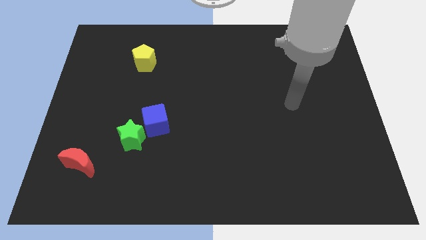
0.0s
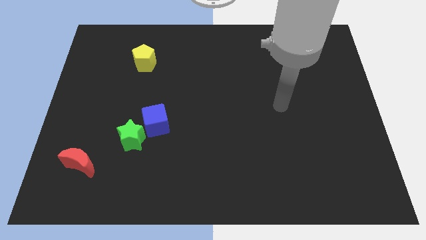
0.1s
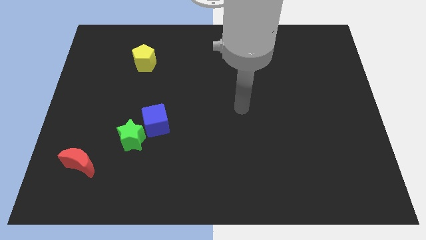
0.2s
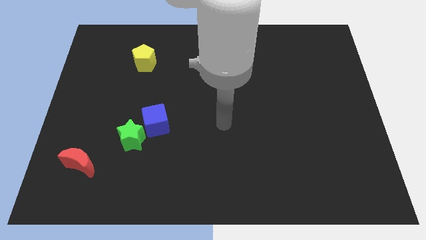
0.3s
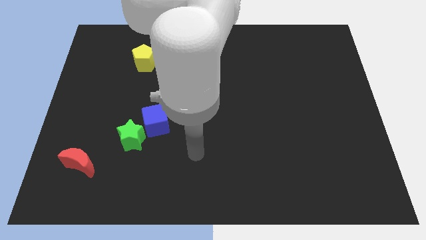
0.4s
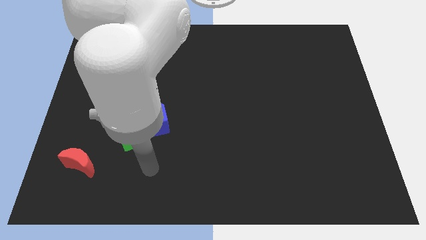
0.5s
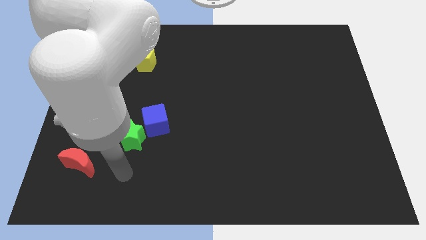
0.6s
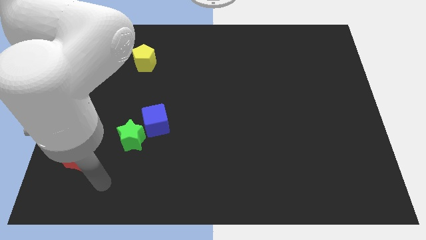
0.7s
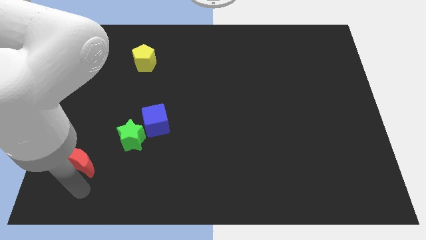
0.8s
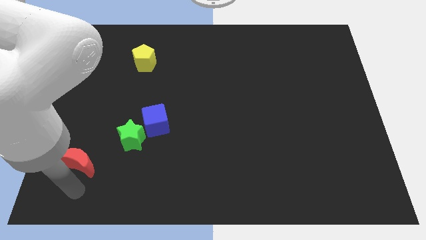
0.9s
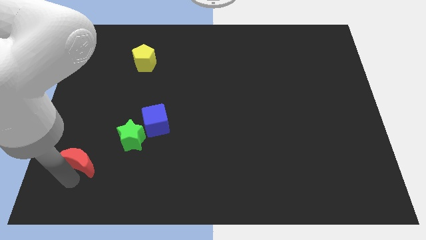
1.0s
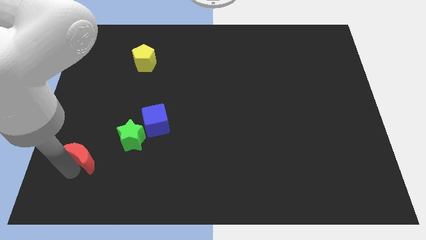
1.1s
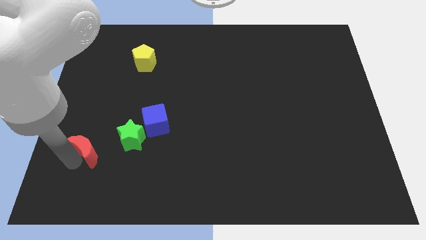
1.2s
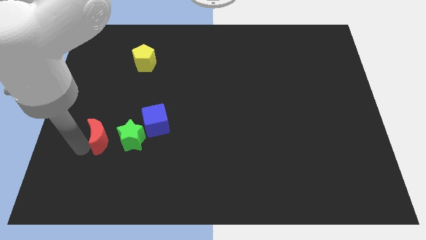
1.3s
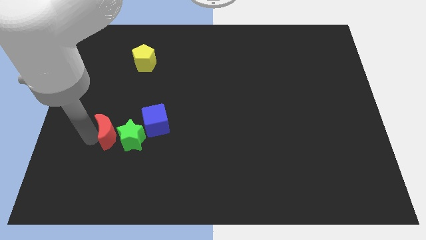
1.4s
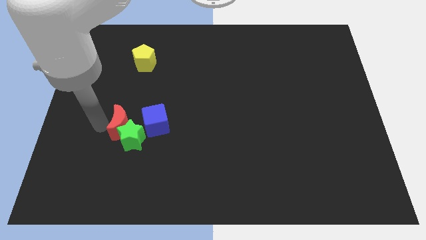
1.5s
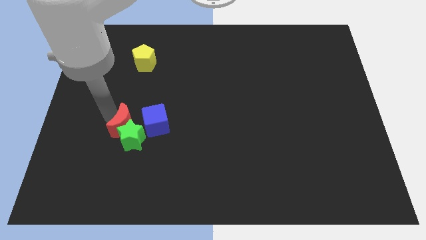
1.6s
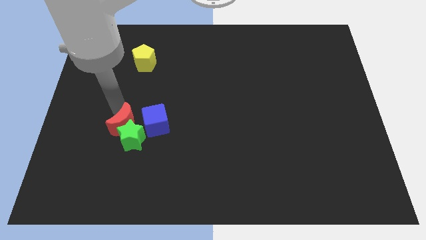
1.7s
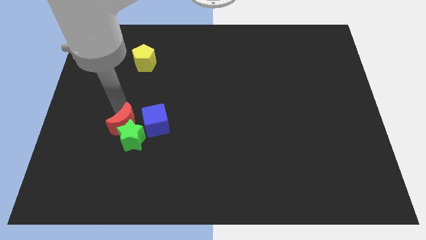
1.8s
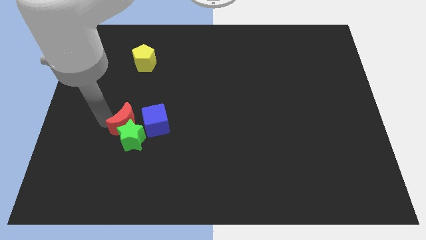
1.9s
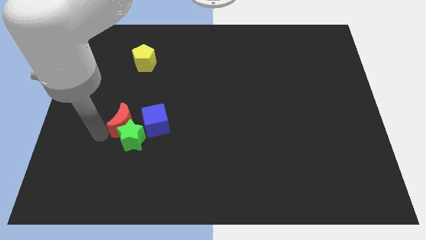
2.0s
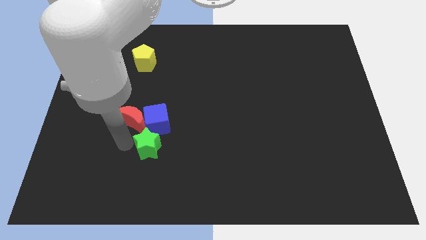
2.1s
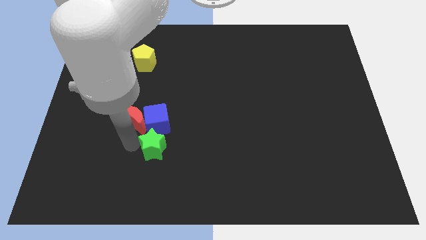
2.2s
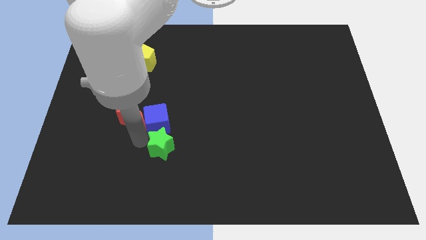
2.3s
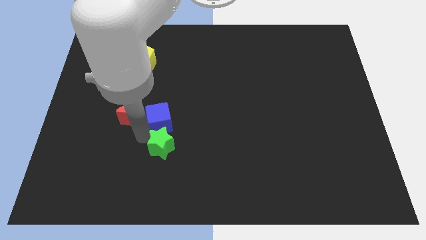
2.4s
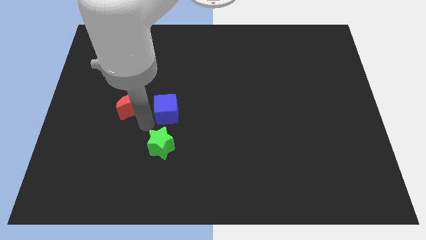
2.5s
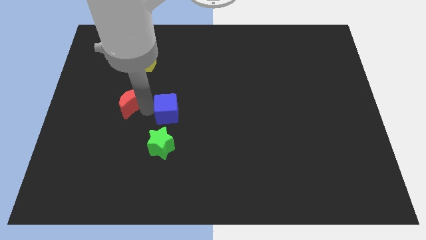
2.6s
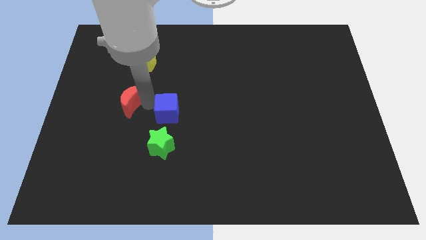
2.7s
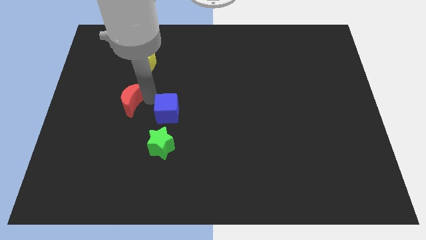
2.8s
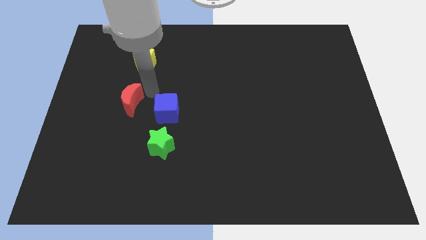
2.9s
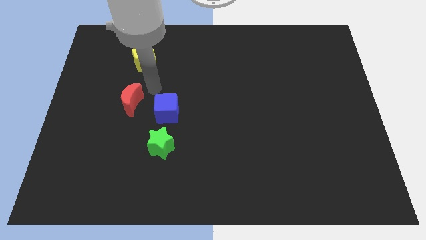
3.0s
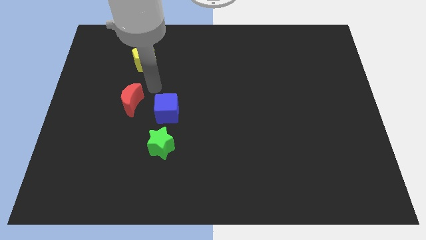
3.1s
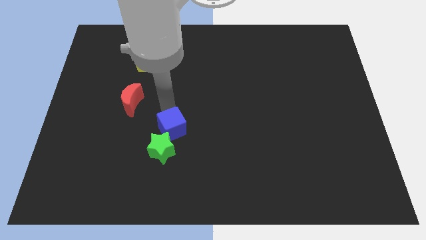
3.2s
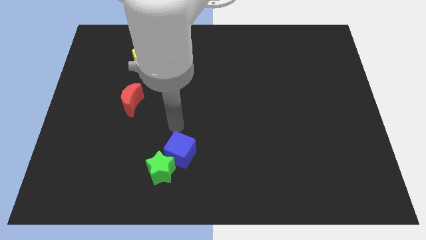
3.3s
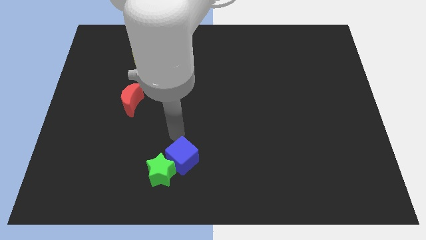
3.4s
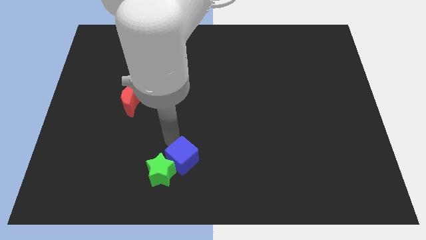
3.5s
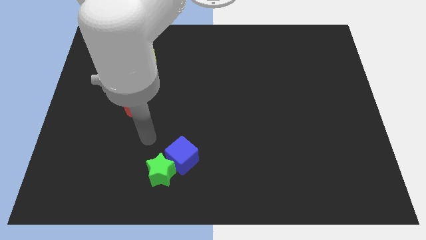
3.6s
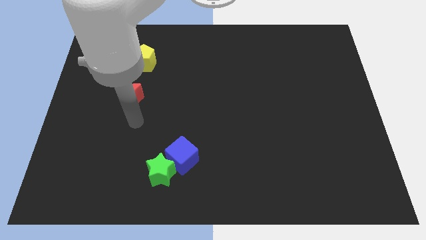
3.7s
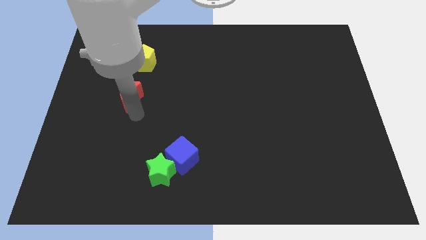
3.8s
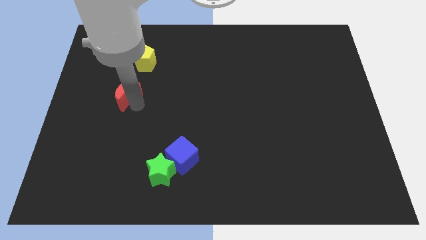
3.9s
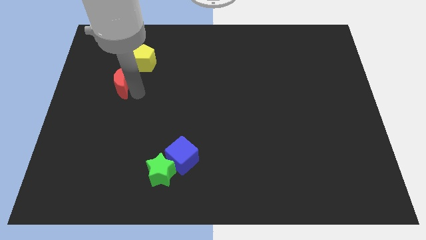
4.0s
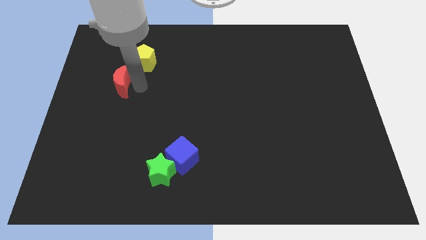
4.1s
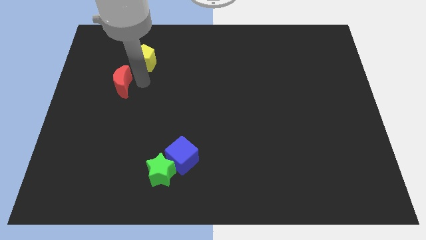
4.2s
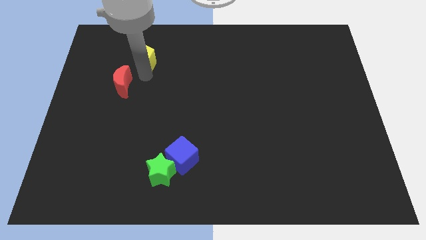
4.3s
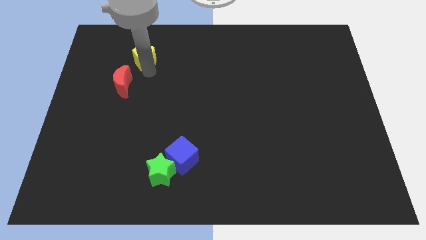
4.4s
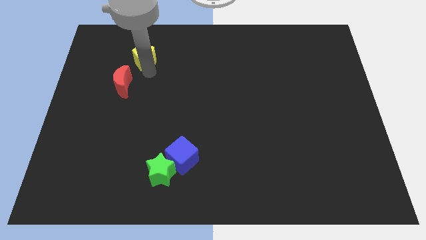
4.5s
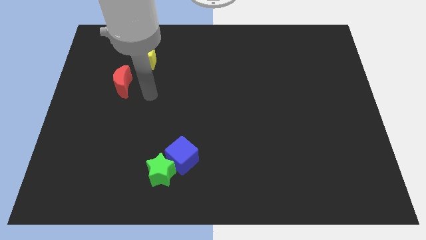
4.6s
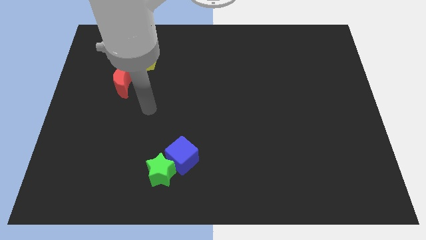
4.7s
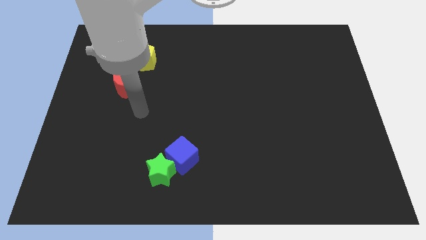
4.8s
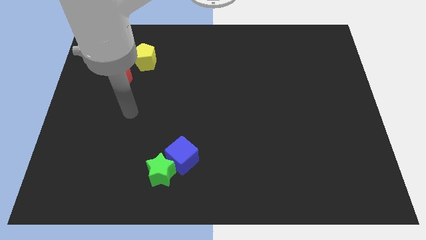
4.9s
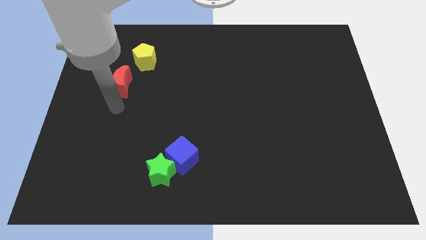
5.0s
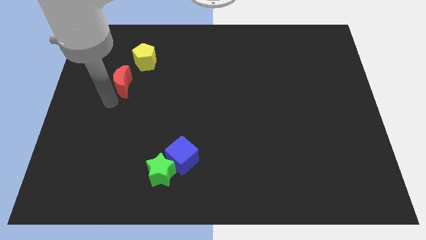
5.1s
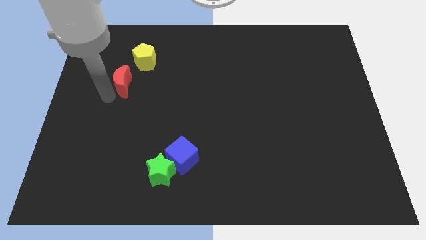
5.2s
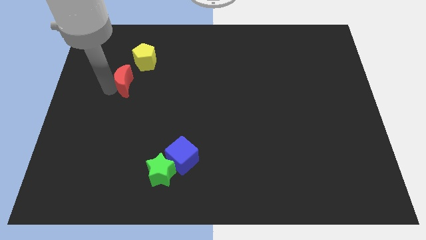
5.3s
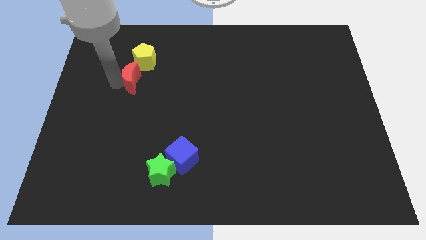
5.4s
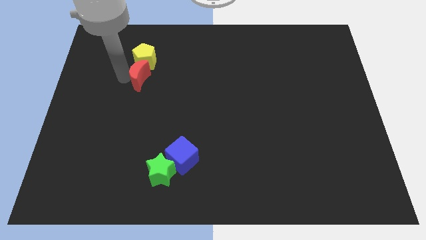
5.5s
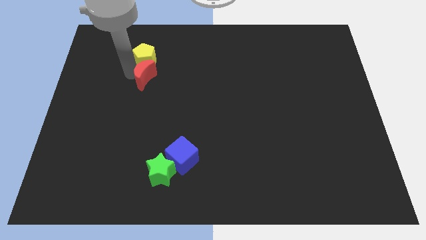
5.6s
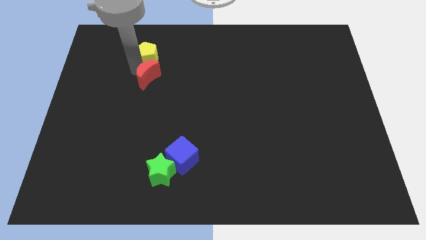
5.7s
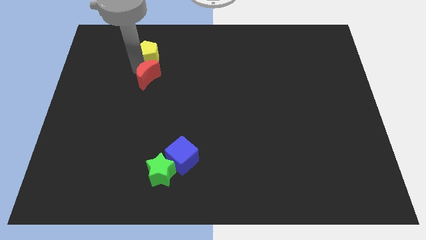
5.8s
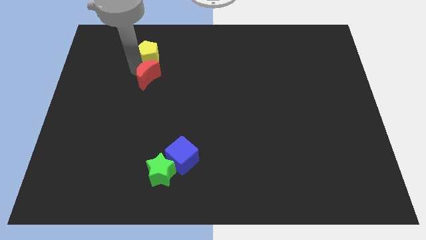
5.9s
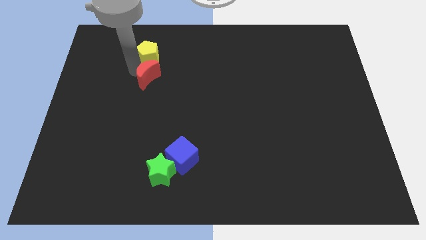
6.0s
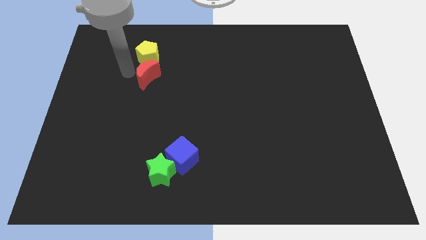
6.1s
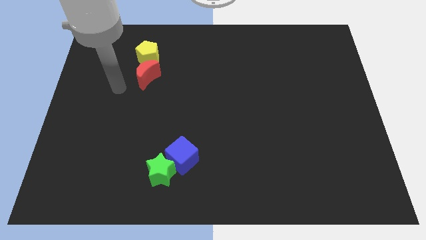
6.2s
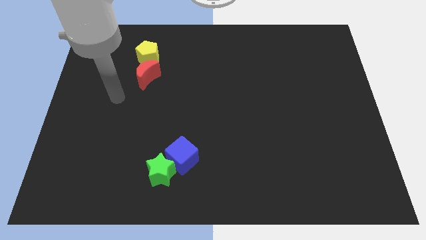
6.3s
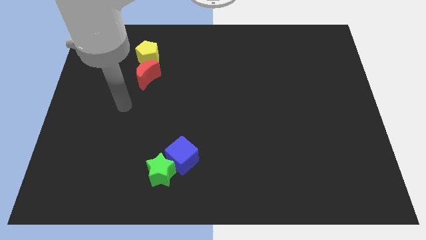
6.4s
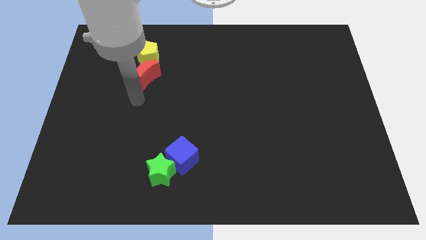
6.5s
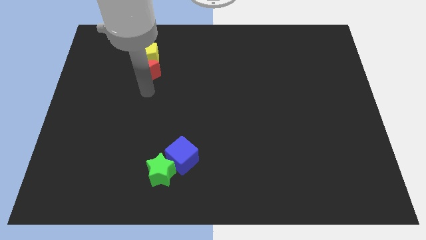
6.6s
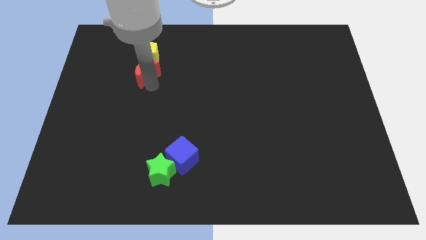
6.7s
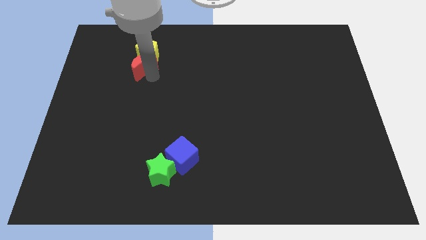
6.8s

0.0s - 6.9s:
push the red moon to the pentagon

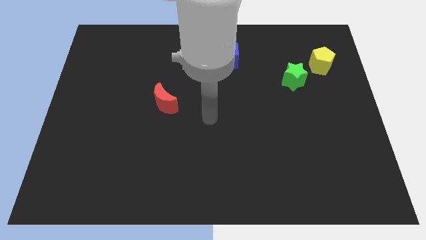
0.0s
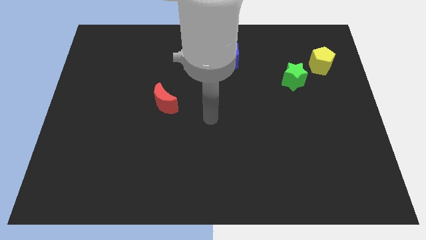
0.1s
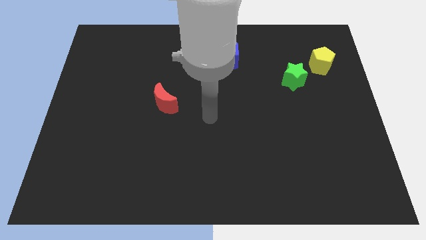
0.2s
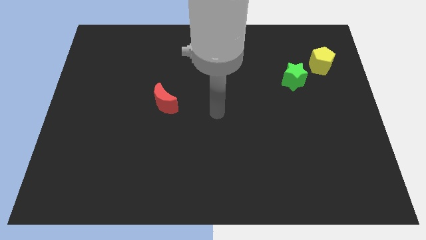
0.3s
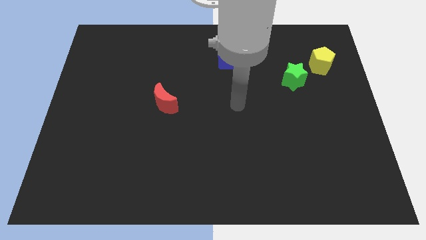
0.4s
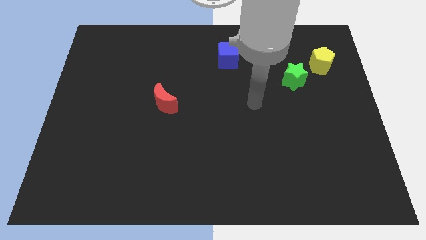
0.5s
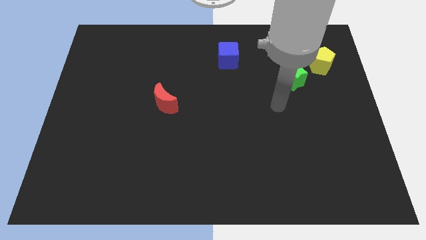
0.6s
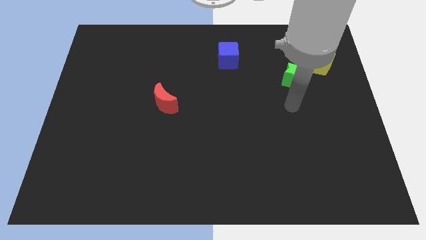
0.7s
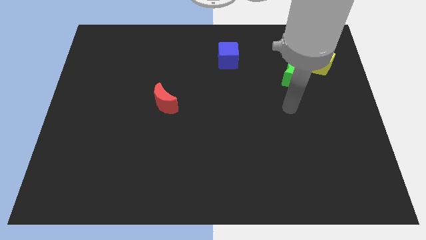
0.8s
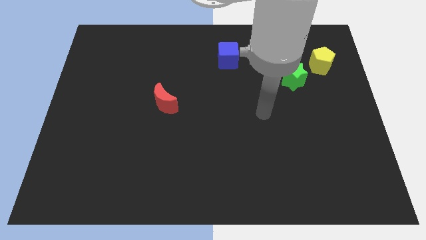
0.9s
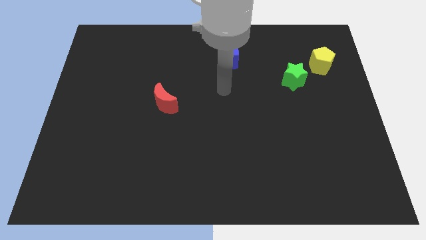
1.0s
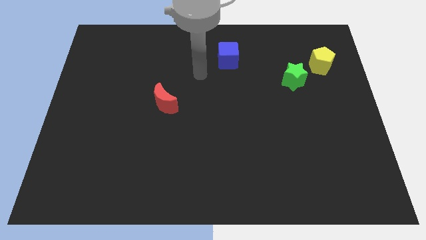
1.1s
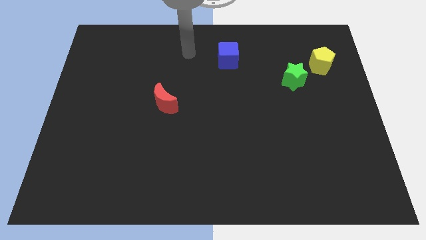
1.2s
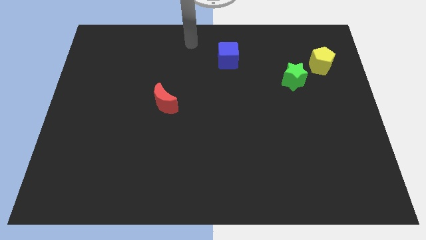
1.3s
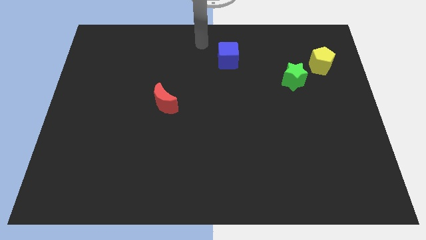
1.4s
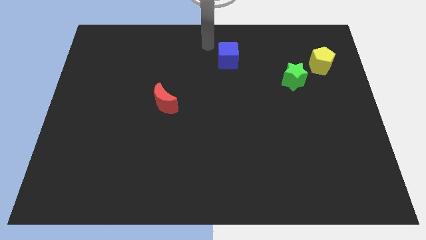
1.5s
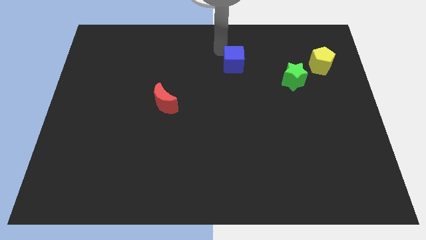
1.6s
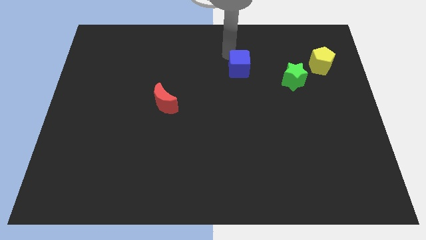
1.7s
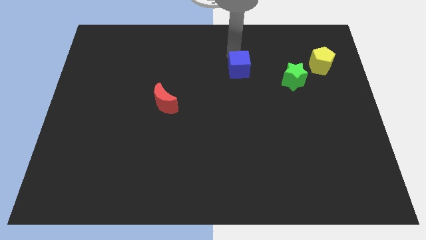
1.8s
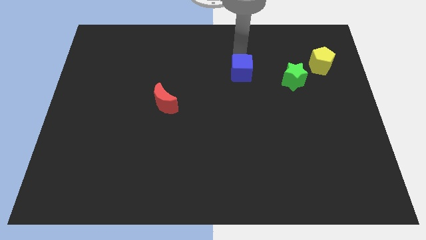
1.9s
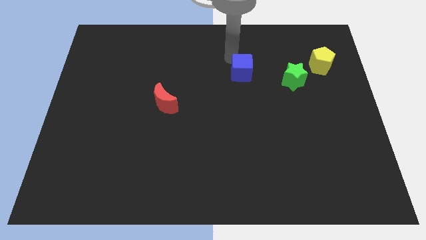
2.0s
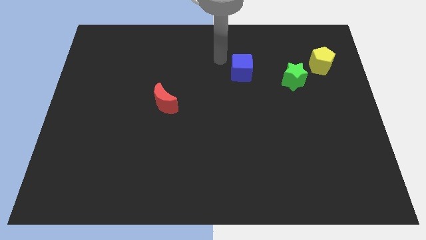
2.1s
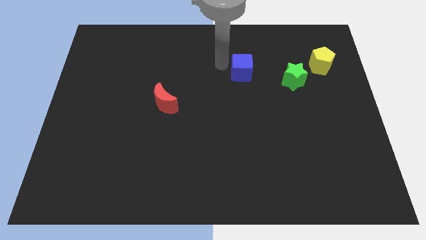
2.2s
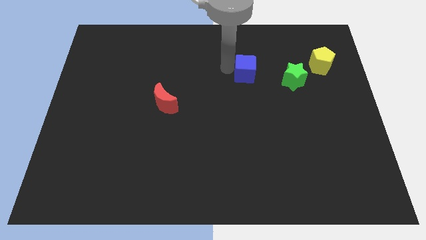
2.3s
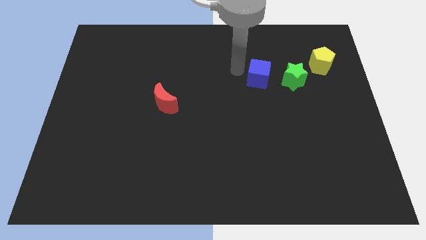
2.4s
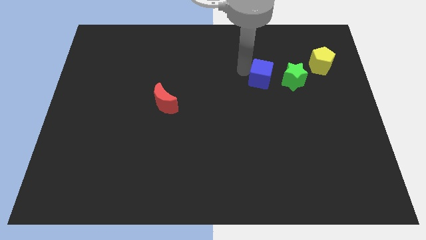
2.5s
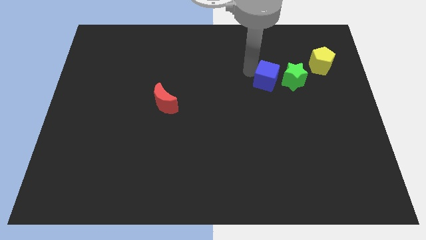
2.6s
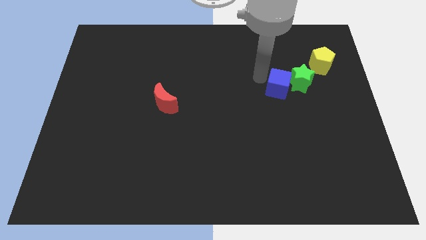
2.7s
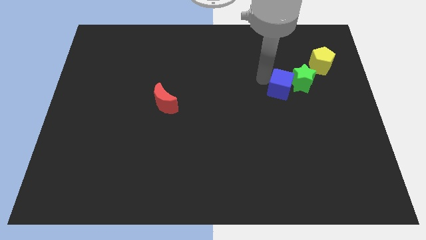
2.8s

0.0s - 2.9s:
slide the blue cube towards the star
